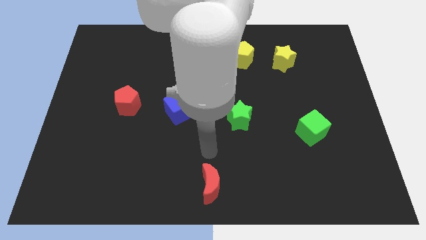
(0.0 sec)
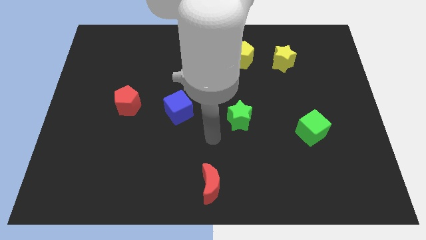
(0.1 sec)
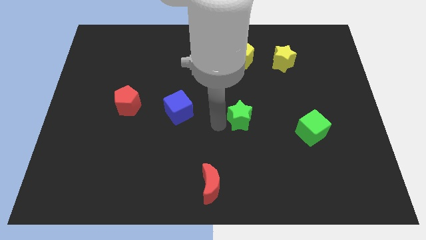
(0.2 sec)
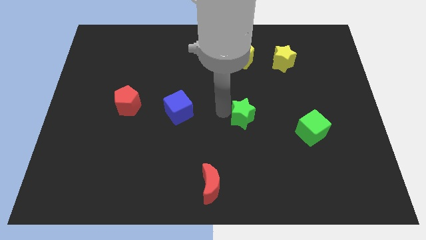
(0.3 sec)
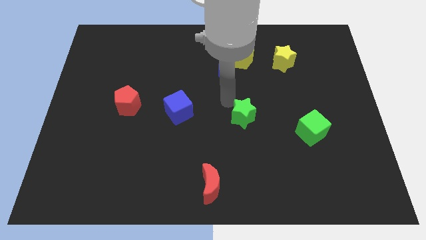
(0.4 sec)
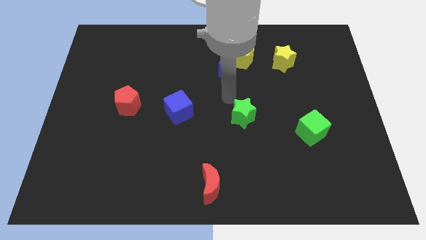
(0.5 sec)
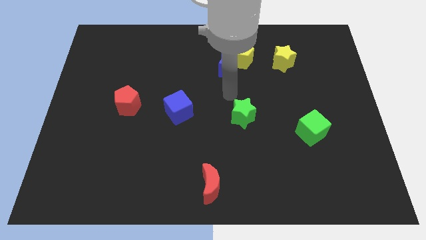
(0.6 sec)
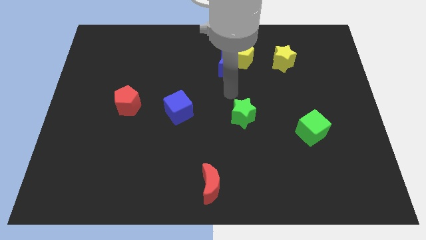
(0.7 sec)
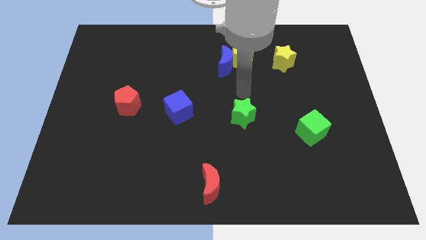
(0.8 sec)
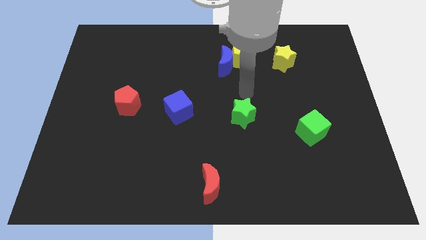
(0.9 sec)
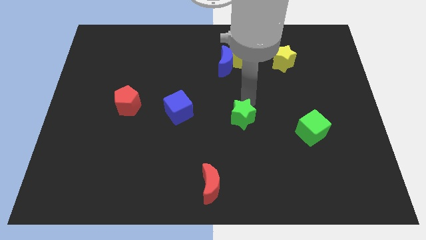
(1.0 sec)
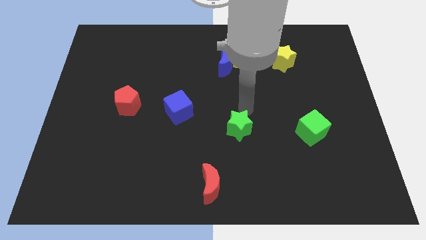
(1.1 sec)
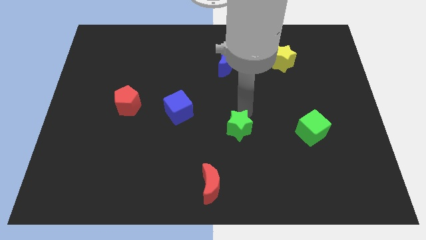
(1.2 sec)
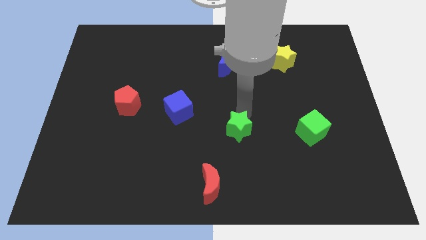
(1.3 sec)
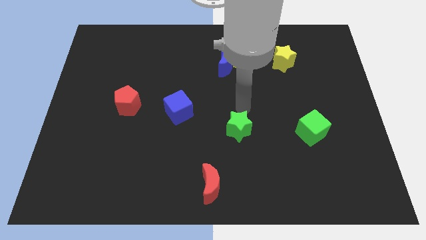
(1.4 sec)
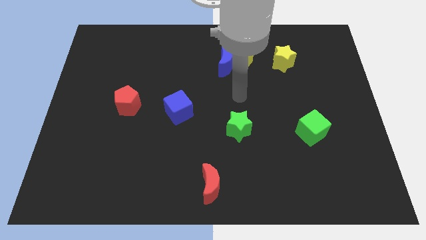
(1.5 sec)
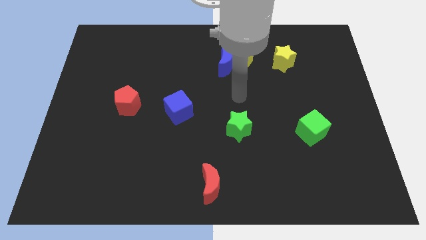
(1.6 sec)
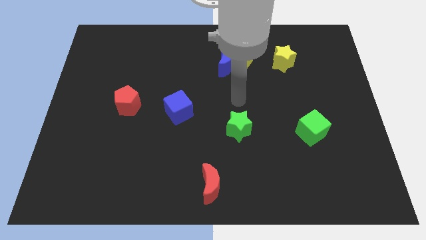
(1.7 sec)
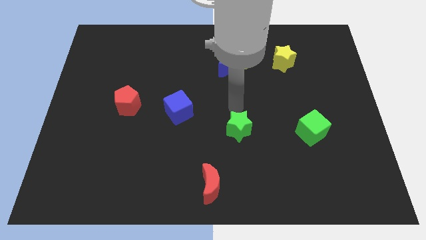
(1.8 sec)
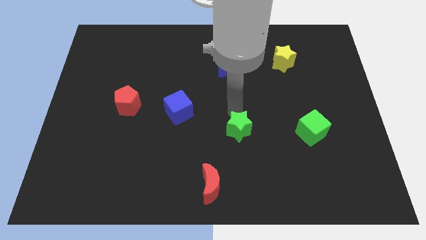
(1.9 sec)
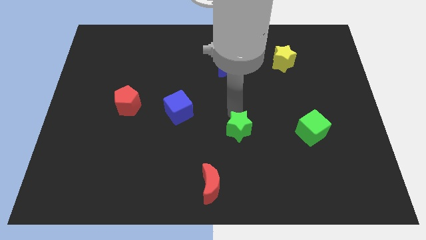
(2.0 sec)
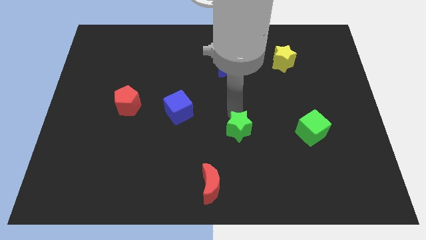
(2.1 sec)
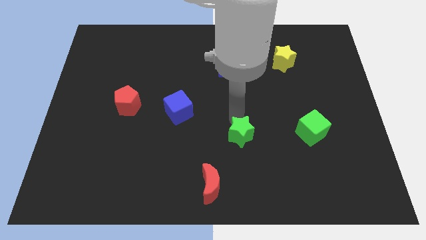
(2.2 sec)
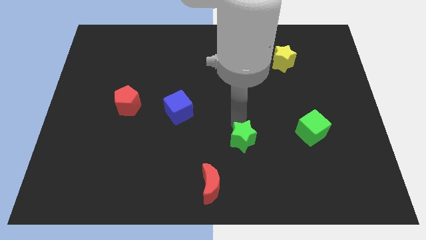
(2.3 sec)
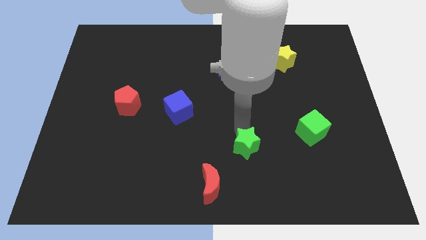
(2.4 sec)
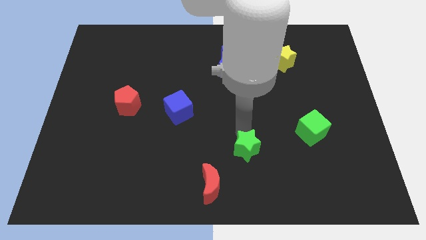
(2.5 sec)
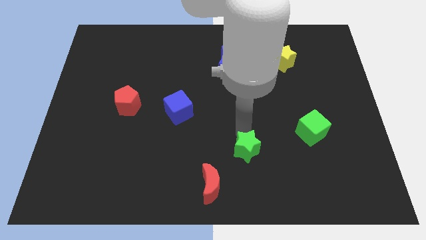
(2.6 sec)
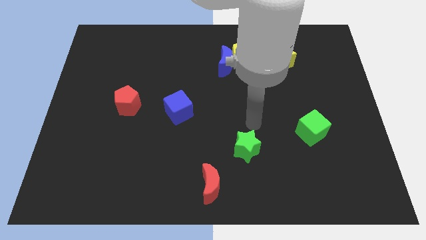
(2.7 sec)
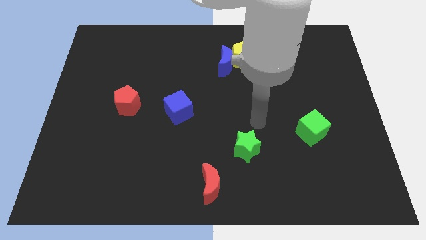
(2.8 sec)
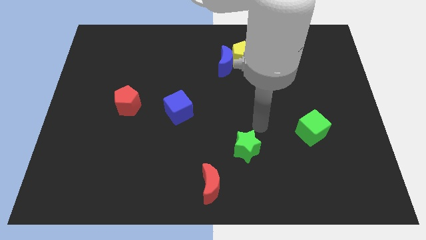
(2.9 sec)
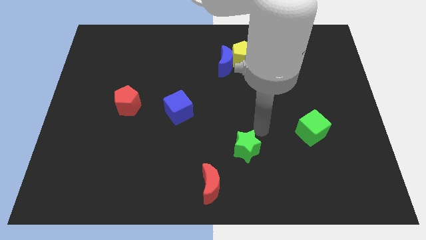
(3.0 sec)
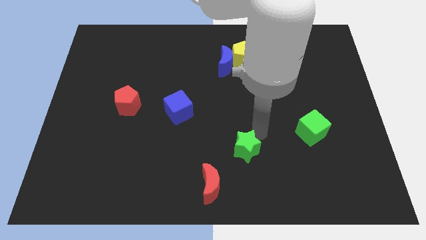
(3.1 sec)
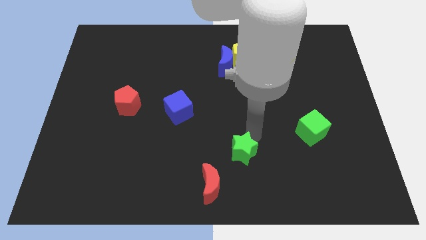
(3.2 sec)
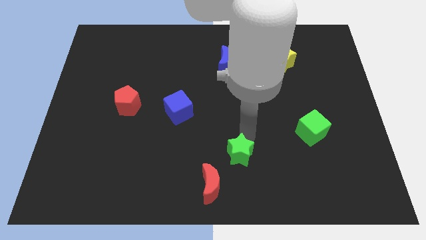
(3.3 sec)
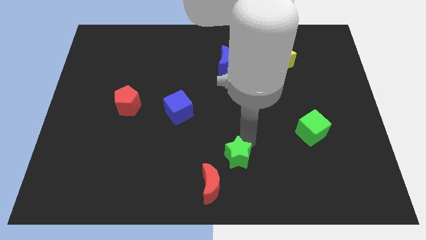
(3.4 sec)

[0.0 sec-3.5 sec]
move the green star towards the top right side of the red moon

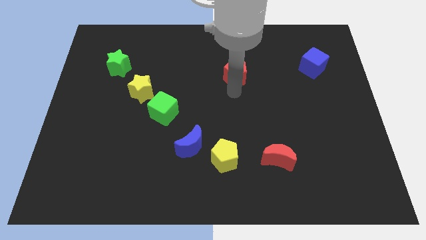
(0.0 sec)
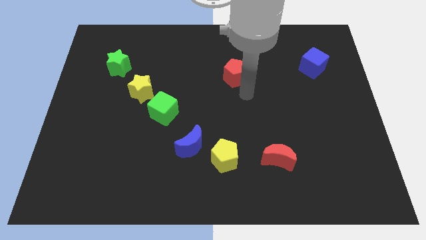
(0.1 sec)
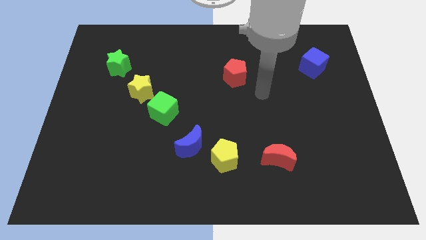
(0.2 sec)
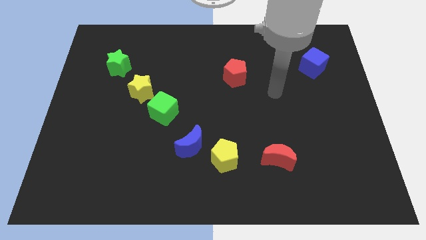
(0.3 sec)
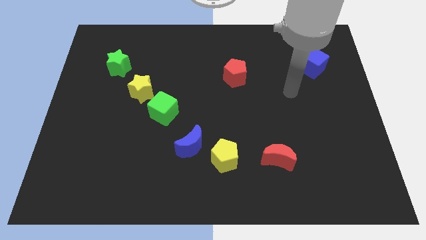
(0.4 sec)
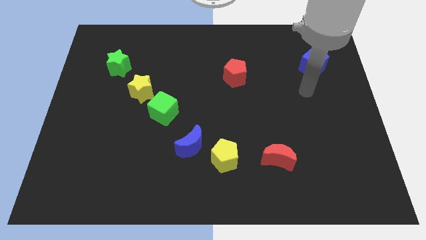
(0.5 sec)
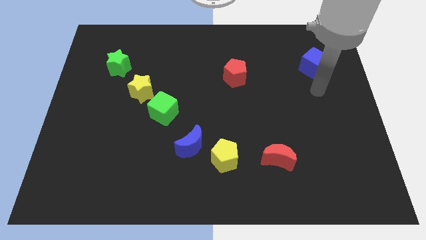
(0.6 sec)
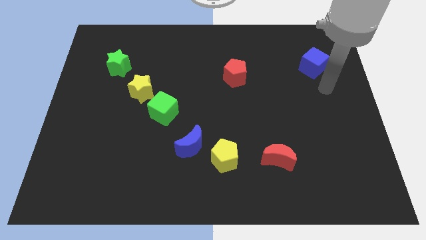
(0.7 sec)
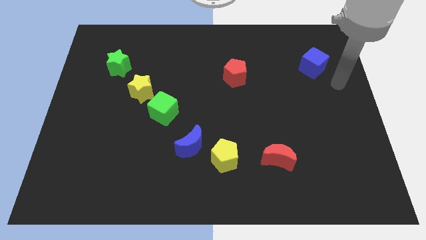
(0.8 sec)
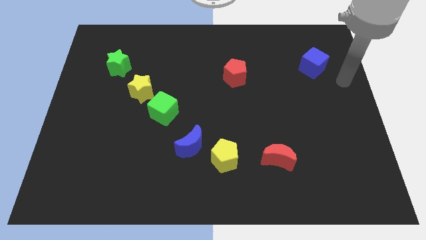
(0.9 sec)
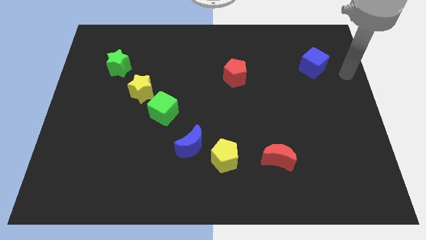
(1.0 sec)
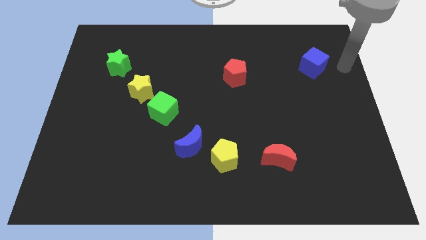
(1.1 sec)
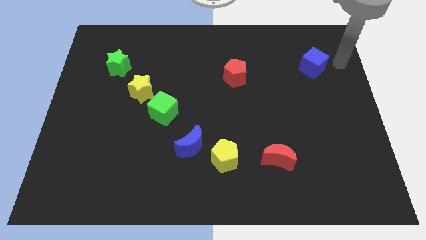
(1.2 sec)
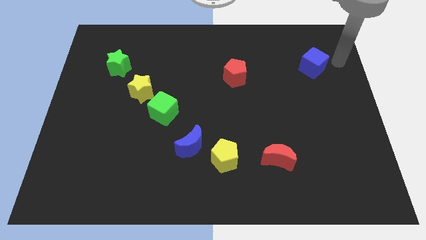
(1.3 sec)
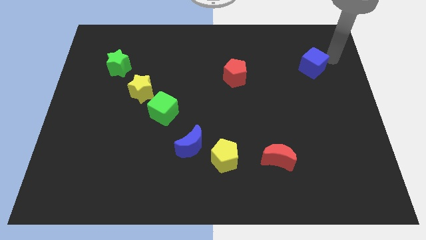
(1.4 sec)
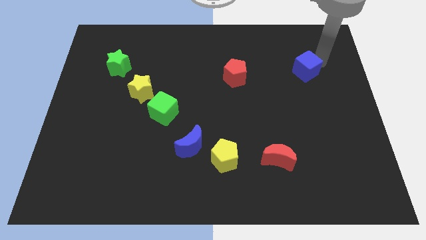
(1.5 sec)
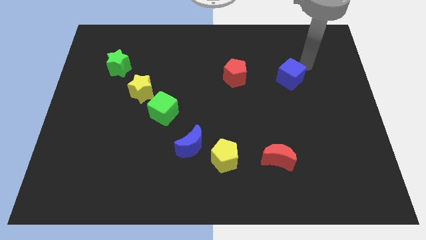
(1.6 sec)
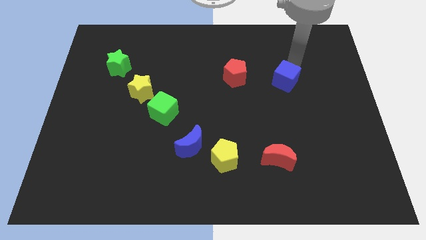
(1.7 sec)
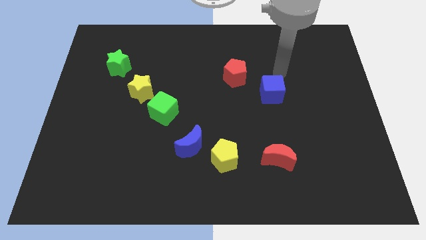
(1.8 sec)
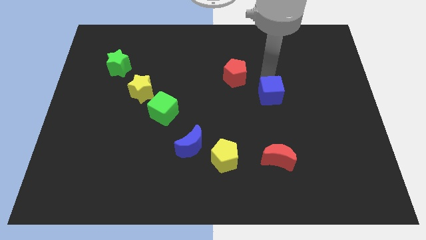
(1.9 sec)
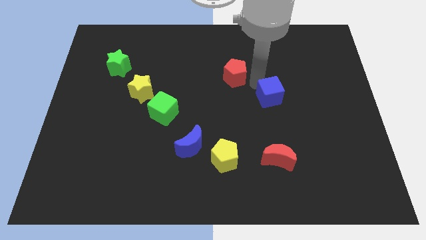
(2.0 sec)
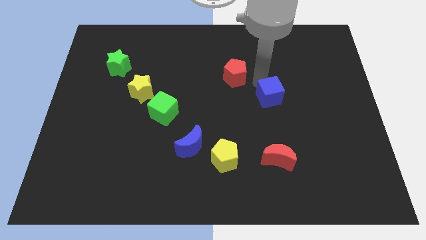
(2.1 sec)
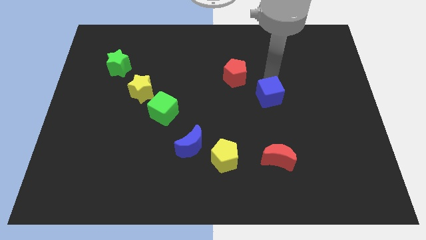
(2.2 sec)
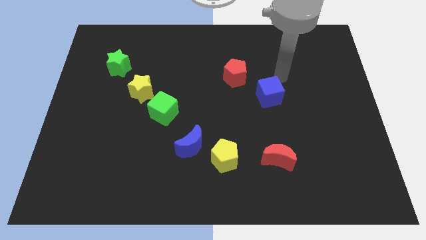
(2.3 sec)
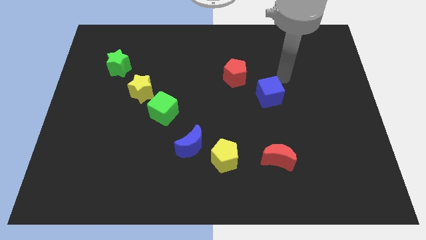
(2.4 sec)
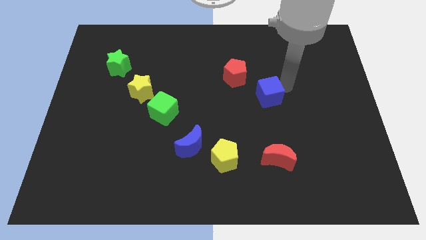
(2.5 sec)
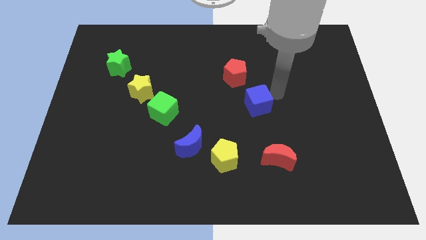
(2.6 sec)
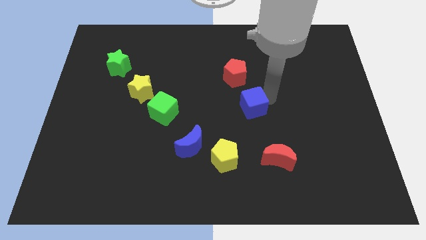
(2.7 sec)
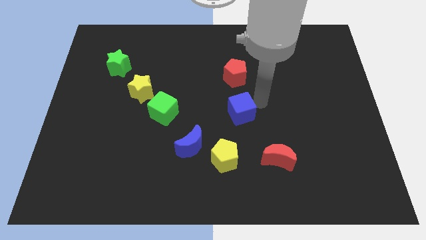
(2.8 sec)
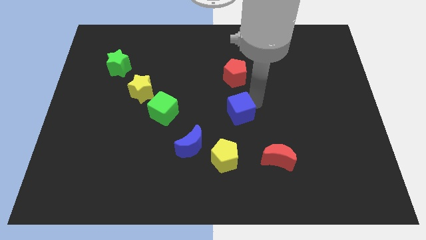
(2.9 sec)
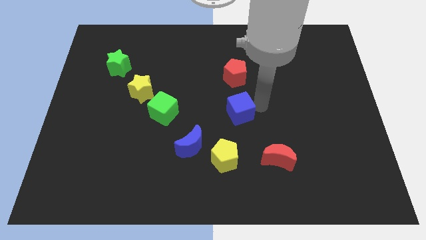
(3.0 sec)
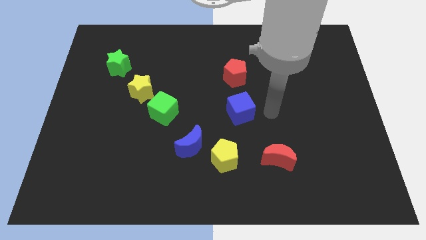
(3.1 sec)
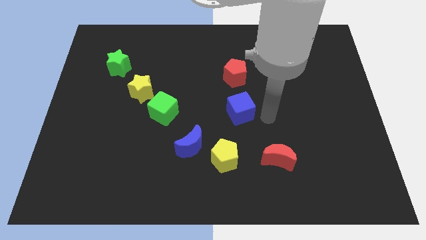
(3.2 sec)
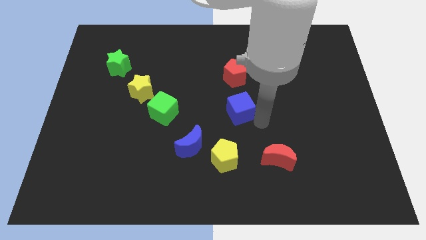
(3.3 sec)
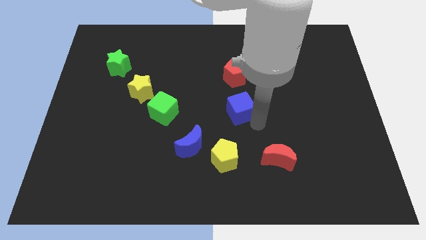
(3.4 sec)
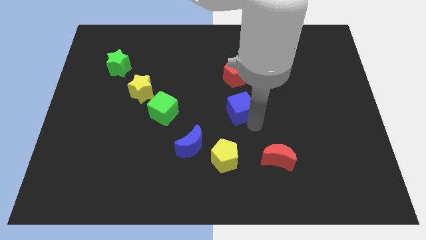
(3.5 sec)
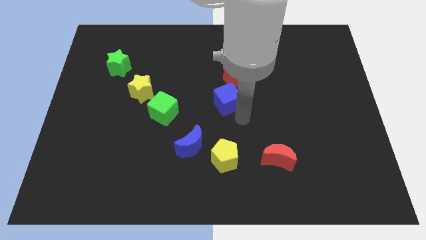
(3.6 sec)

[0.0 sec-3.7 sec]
place the blue cube in between the red pentagon and the yellow pentagon

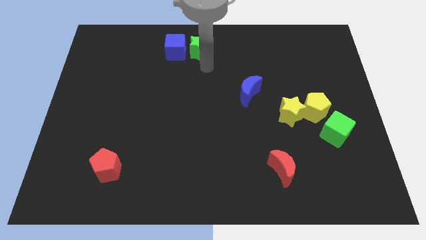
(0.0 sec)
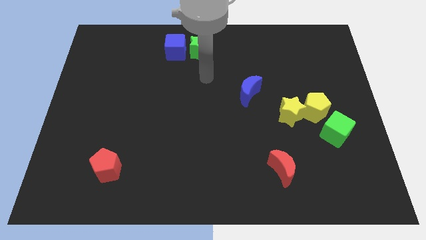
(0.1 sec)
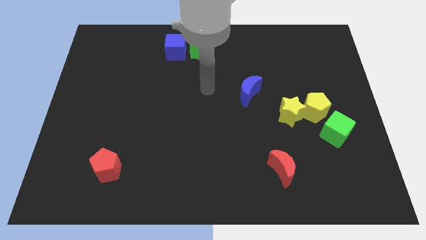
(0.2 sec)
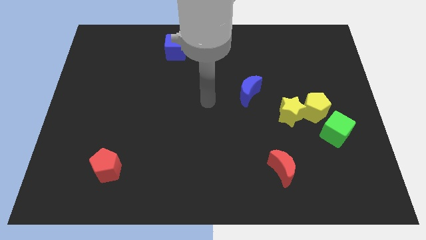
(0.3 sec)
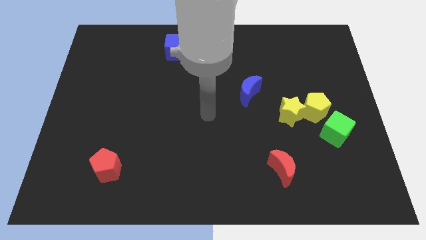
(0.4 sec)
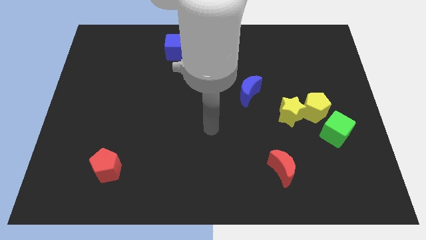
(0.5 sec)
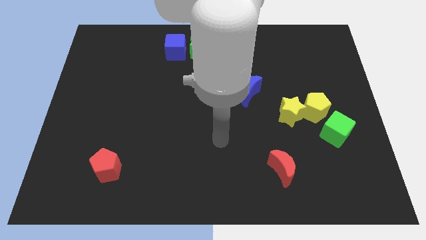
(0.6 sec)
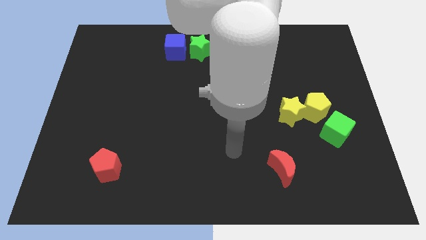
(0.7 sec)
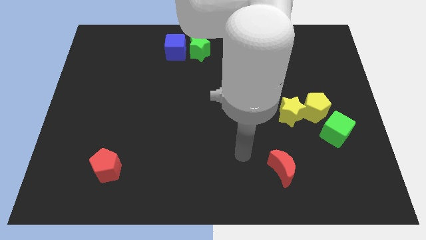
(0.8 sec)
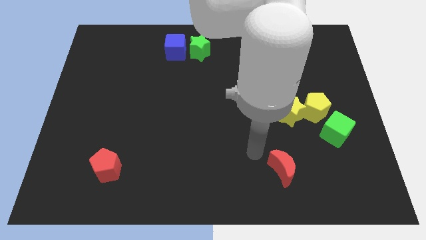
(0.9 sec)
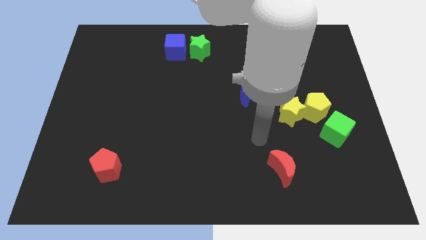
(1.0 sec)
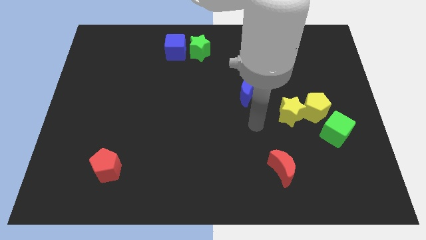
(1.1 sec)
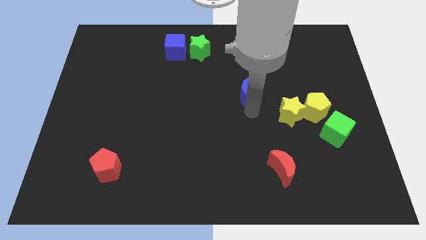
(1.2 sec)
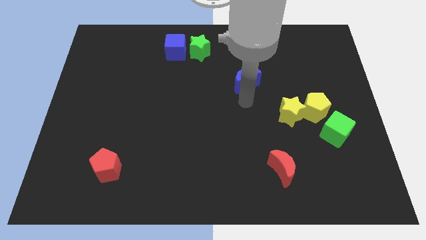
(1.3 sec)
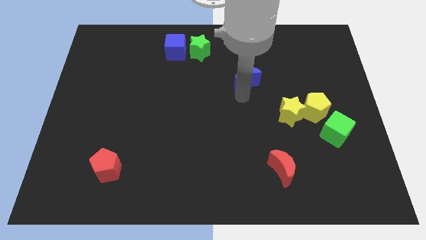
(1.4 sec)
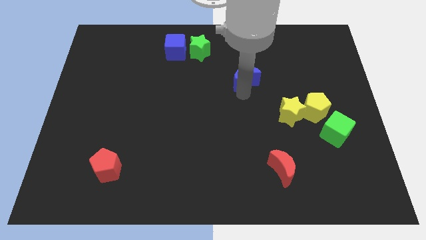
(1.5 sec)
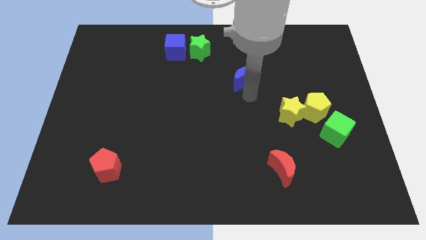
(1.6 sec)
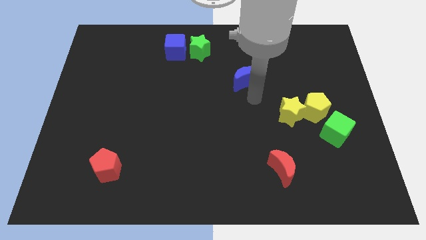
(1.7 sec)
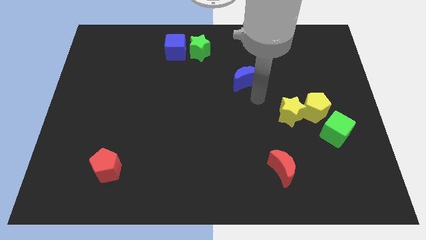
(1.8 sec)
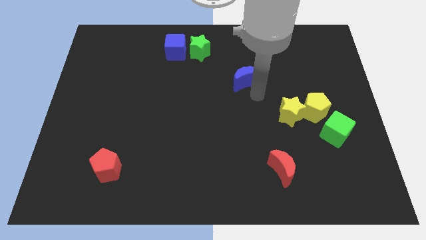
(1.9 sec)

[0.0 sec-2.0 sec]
slightly move the blue crescent towards top
